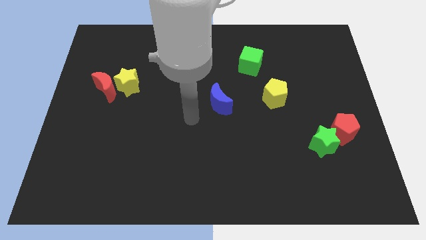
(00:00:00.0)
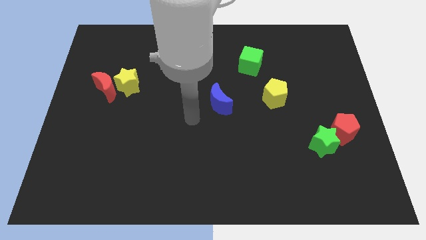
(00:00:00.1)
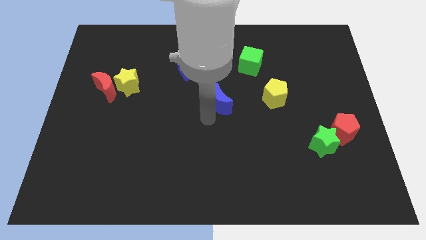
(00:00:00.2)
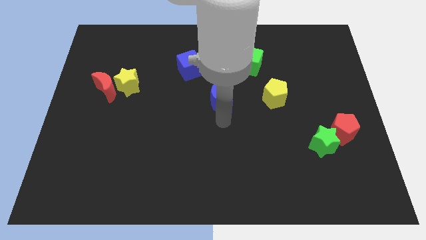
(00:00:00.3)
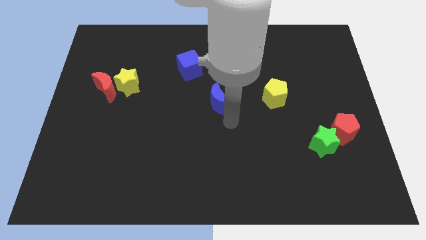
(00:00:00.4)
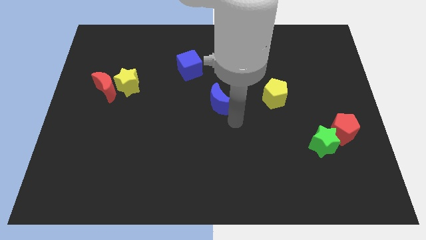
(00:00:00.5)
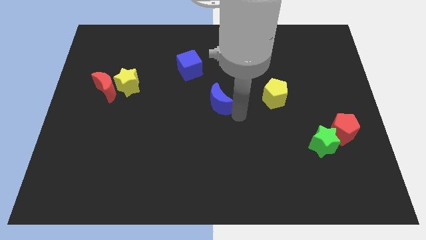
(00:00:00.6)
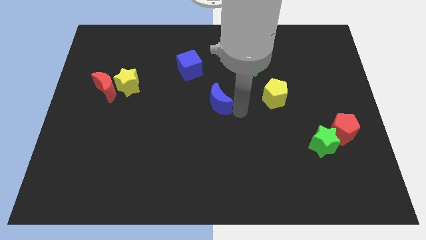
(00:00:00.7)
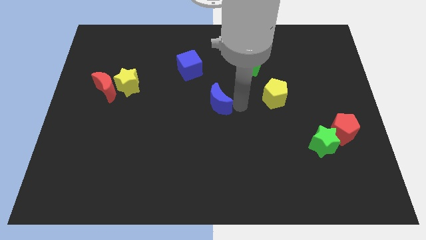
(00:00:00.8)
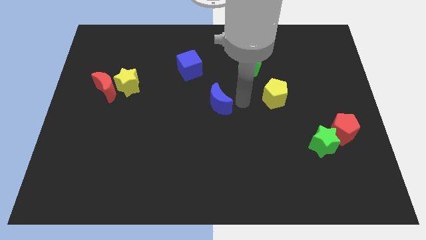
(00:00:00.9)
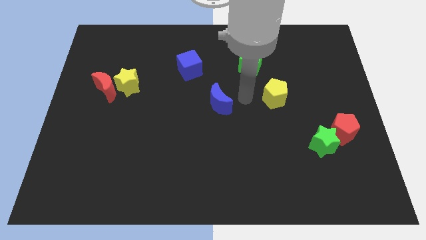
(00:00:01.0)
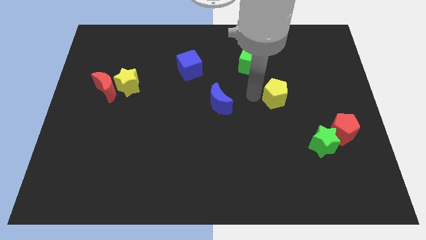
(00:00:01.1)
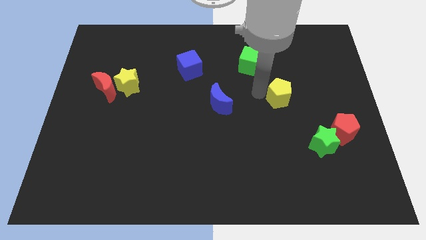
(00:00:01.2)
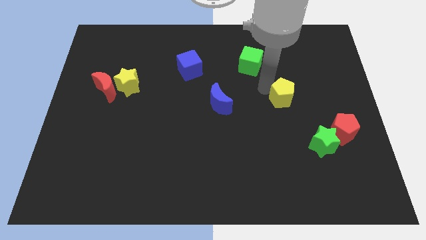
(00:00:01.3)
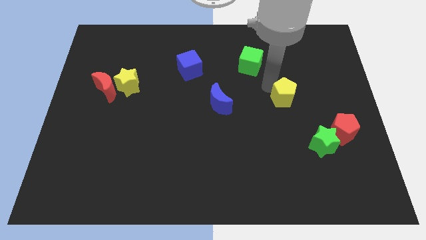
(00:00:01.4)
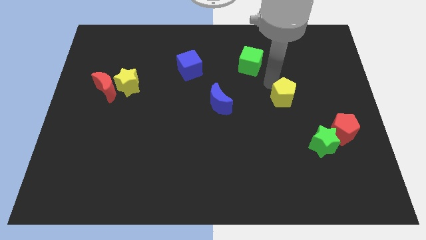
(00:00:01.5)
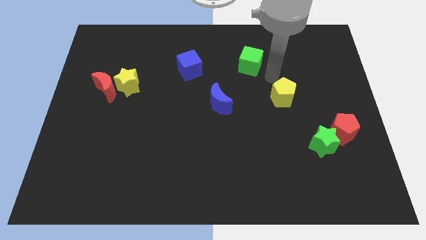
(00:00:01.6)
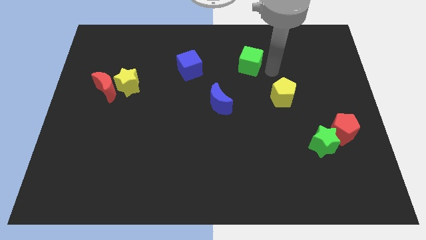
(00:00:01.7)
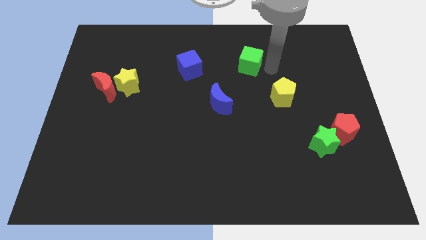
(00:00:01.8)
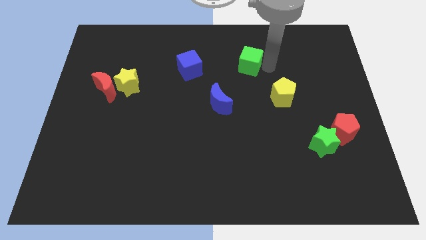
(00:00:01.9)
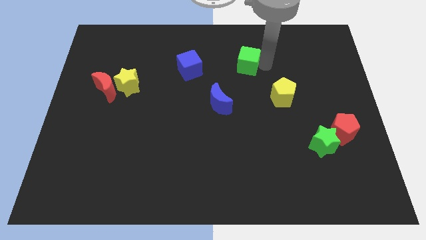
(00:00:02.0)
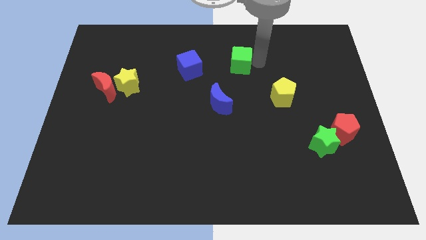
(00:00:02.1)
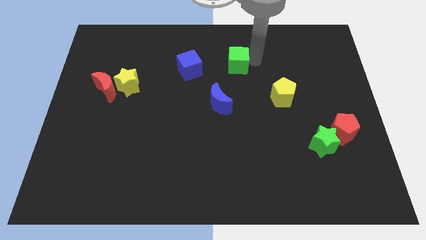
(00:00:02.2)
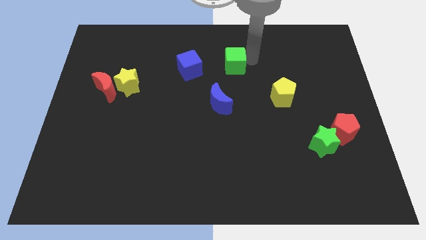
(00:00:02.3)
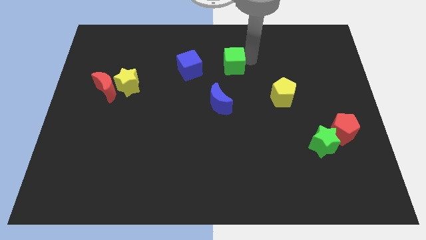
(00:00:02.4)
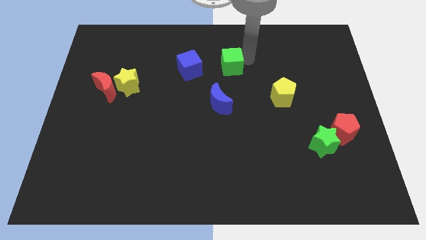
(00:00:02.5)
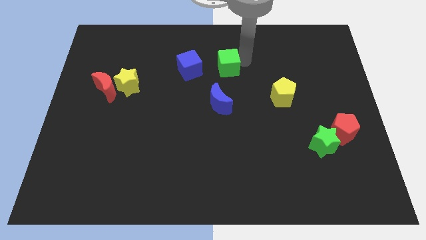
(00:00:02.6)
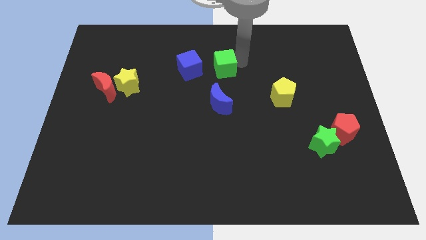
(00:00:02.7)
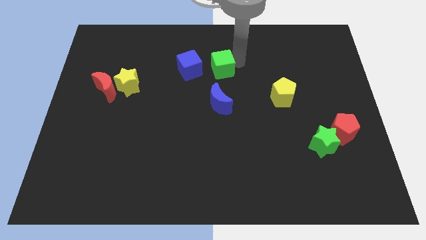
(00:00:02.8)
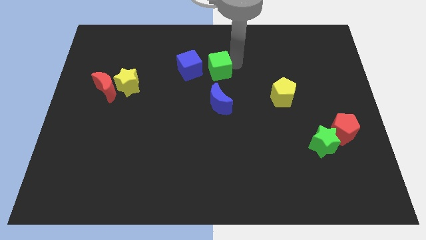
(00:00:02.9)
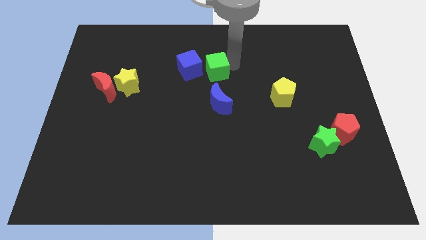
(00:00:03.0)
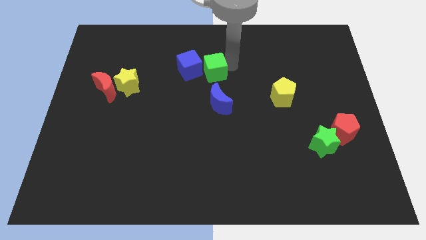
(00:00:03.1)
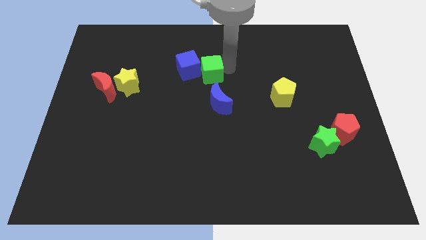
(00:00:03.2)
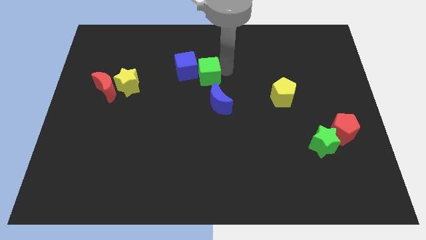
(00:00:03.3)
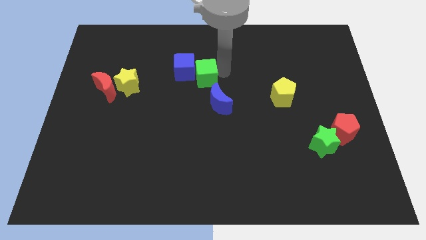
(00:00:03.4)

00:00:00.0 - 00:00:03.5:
move the green cube towards the blue cube

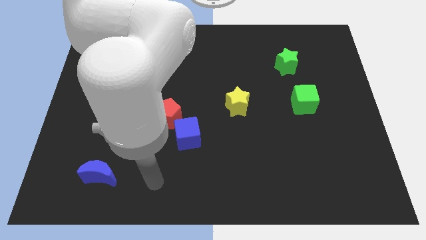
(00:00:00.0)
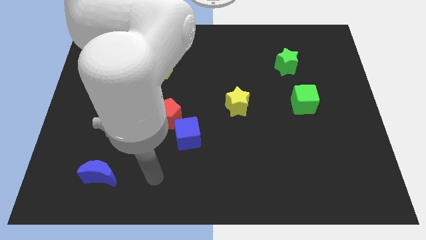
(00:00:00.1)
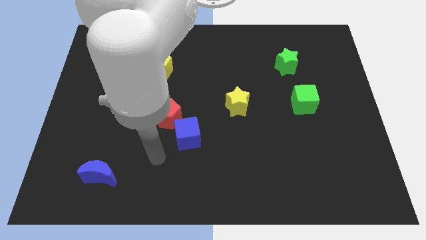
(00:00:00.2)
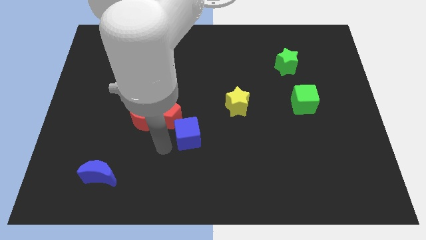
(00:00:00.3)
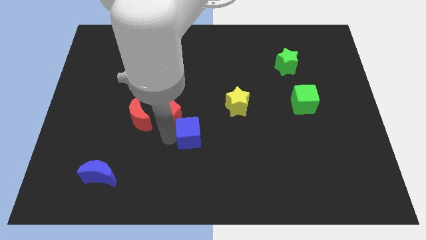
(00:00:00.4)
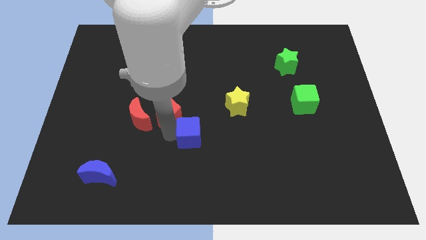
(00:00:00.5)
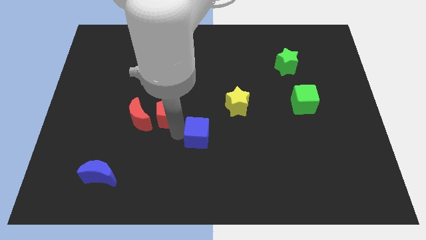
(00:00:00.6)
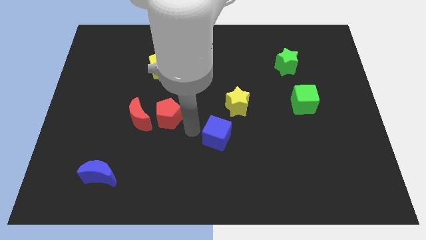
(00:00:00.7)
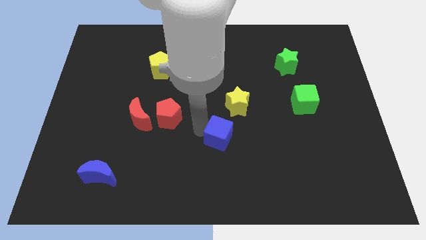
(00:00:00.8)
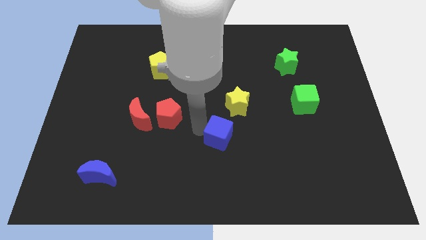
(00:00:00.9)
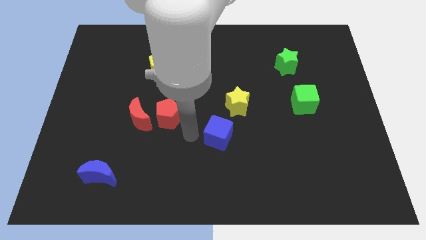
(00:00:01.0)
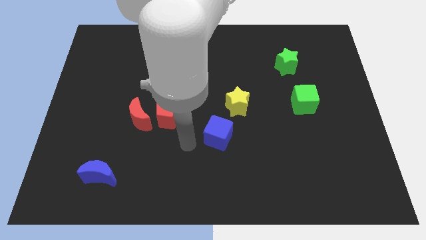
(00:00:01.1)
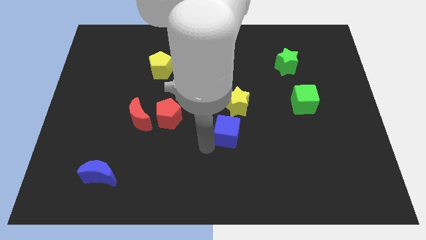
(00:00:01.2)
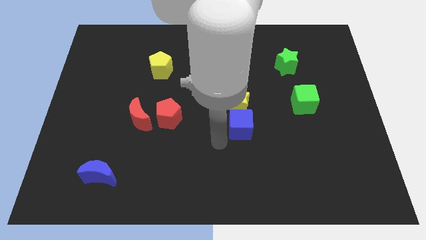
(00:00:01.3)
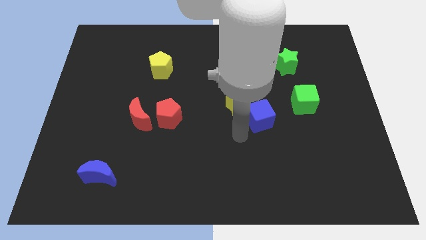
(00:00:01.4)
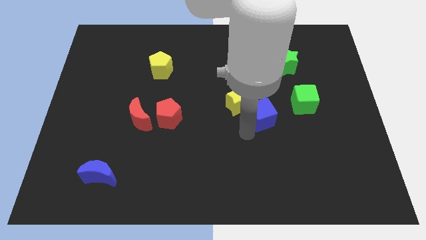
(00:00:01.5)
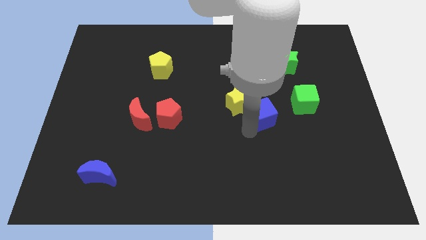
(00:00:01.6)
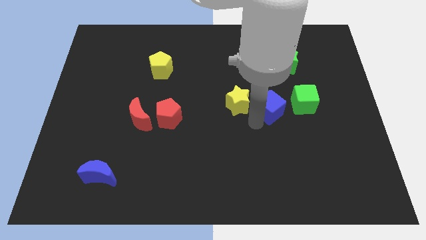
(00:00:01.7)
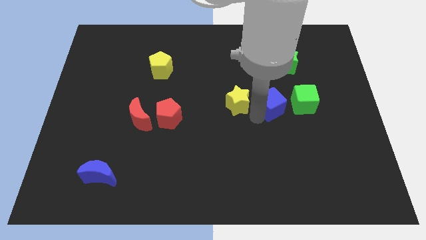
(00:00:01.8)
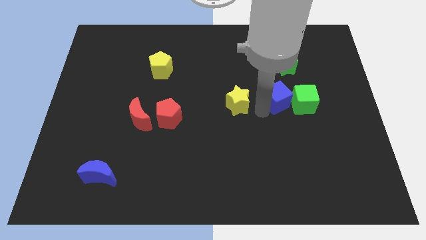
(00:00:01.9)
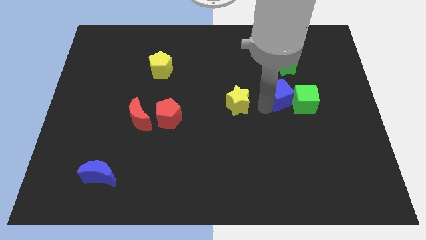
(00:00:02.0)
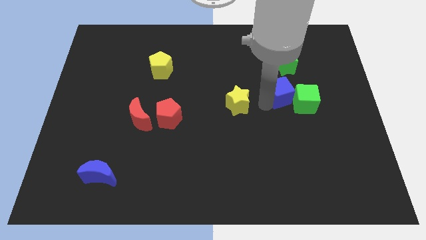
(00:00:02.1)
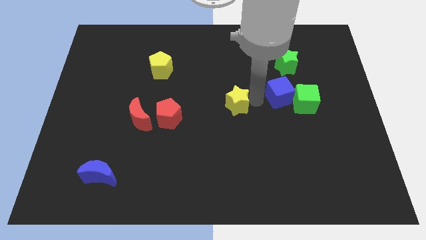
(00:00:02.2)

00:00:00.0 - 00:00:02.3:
move the blue cube to the green cube

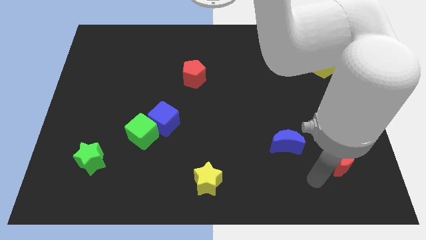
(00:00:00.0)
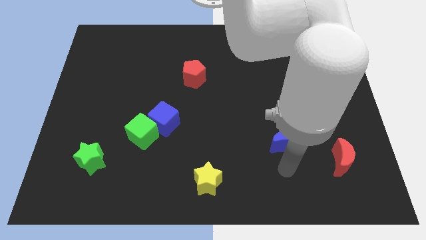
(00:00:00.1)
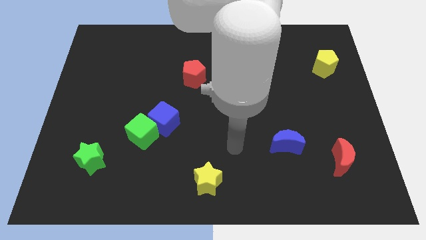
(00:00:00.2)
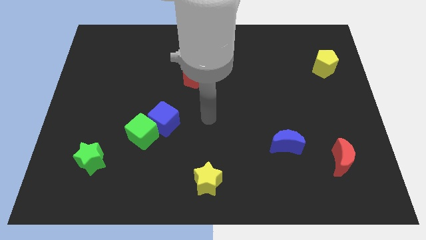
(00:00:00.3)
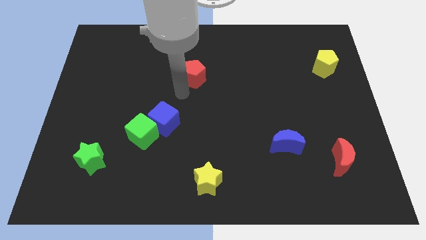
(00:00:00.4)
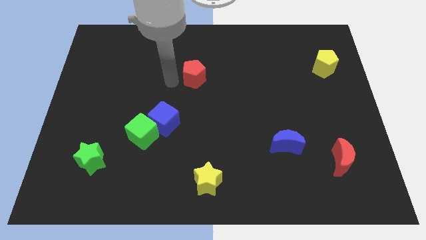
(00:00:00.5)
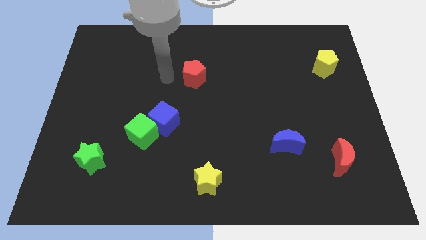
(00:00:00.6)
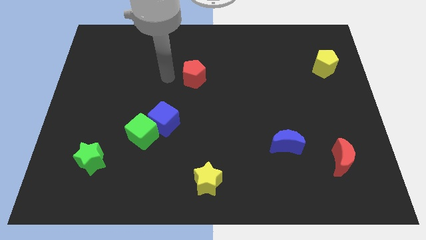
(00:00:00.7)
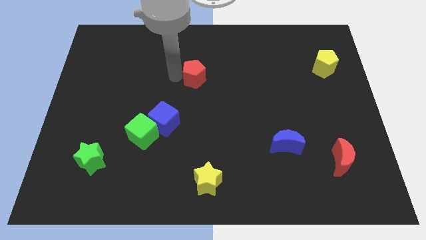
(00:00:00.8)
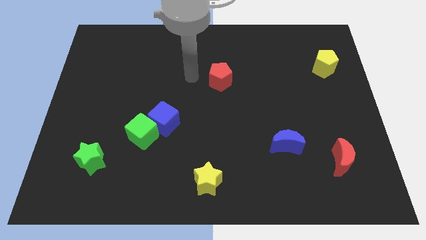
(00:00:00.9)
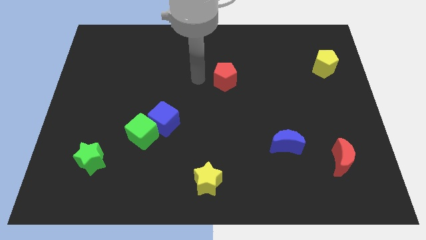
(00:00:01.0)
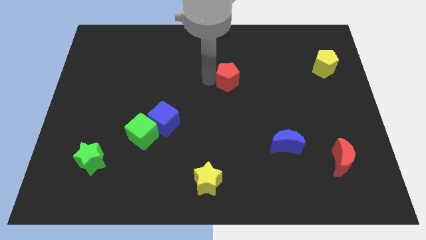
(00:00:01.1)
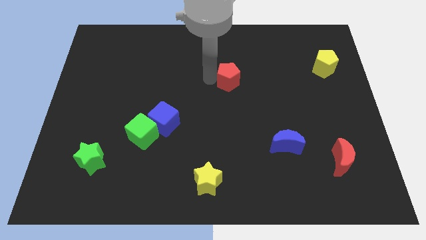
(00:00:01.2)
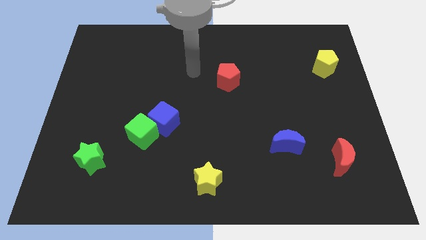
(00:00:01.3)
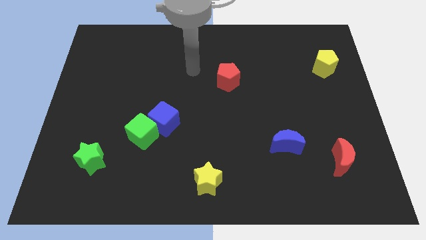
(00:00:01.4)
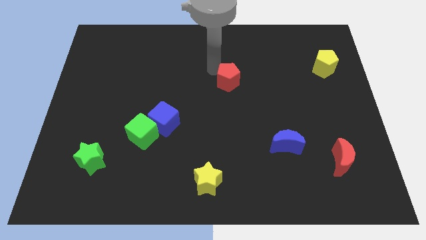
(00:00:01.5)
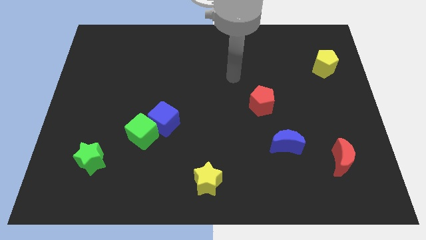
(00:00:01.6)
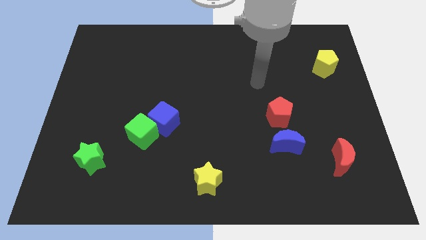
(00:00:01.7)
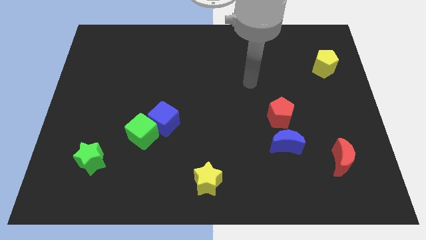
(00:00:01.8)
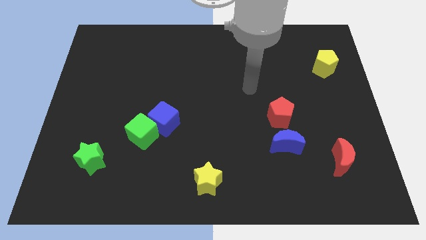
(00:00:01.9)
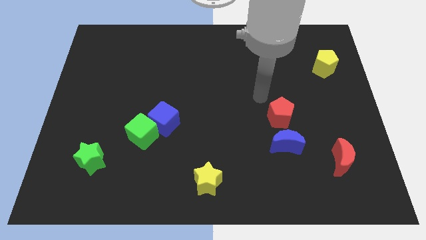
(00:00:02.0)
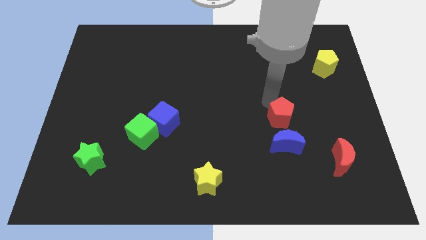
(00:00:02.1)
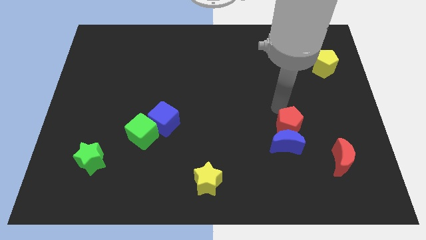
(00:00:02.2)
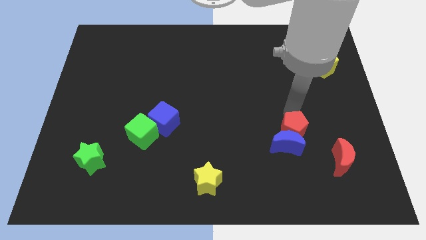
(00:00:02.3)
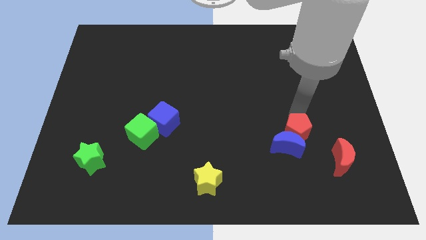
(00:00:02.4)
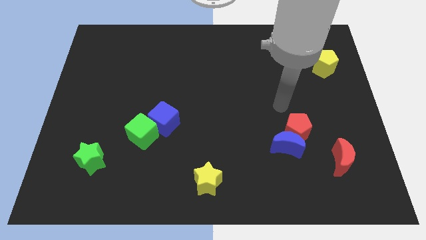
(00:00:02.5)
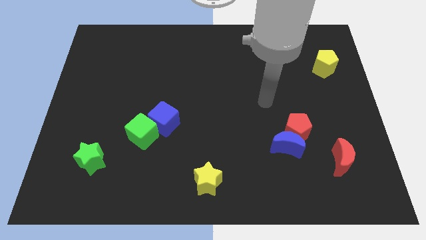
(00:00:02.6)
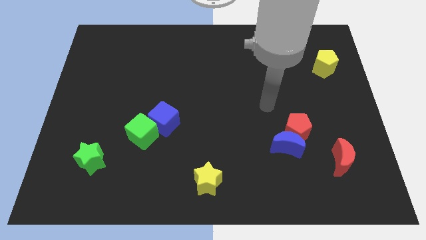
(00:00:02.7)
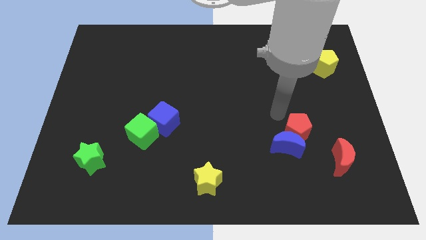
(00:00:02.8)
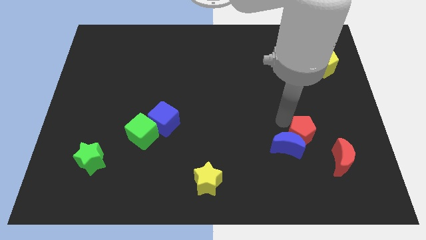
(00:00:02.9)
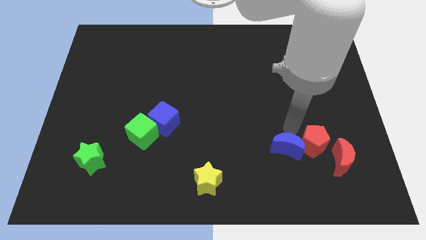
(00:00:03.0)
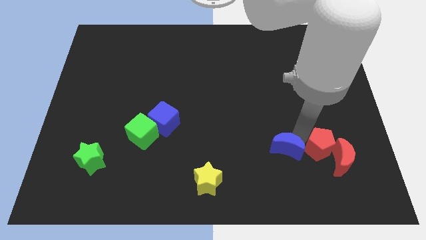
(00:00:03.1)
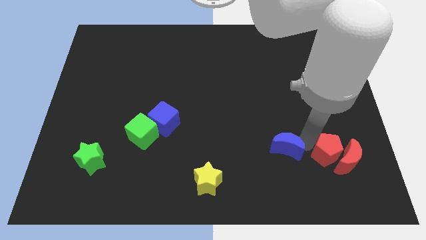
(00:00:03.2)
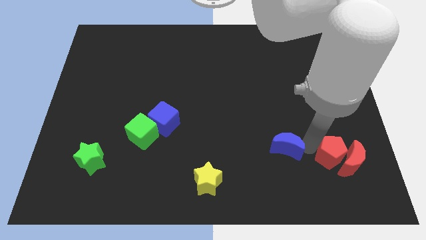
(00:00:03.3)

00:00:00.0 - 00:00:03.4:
push the red pentagon towards the red moon
